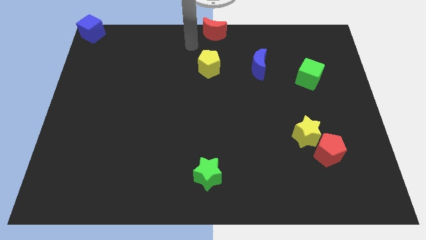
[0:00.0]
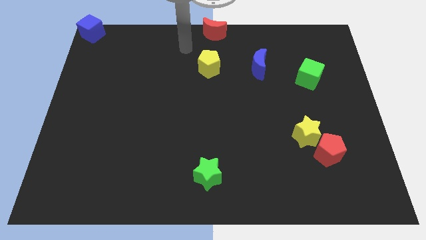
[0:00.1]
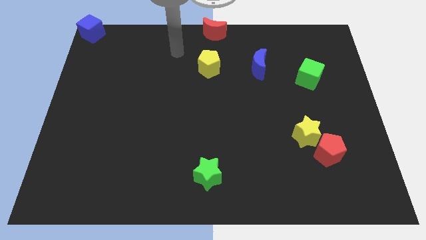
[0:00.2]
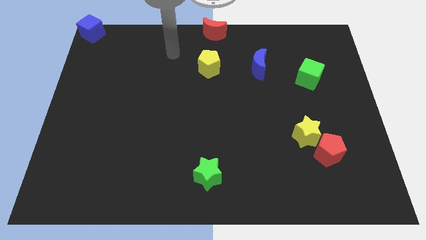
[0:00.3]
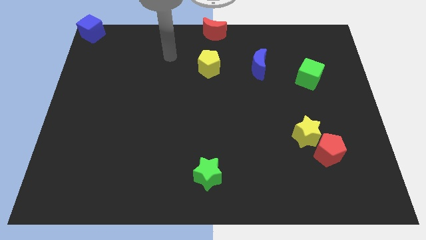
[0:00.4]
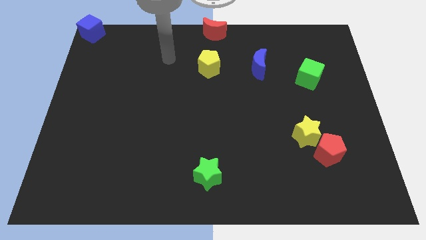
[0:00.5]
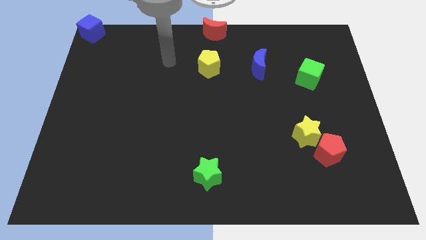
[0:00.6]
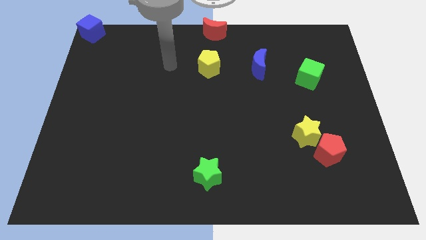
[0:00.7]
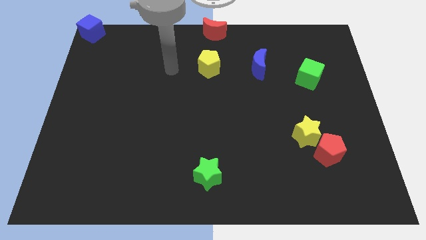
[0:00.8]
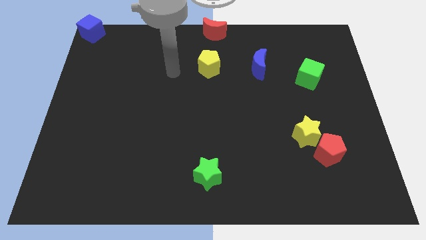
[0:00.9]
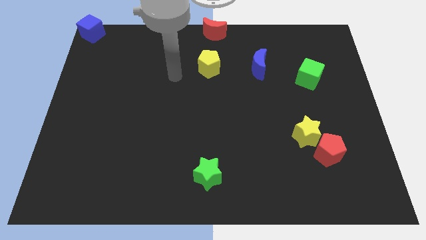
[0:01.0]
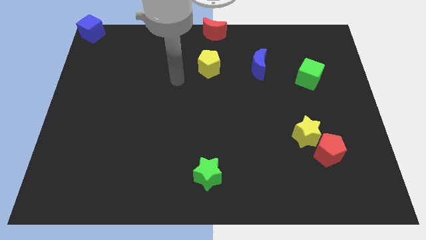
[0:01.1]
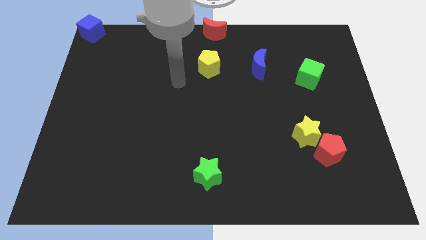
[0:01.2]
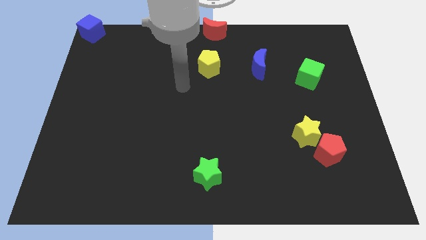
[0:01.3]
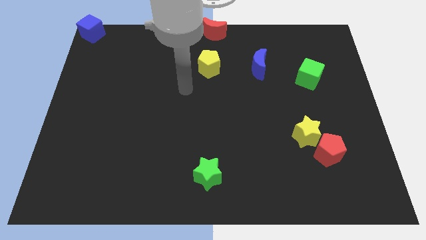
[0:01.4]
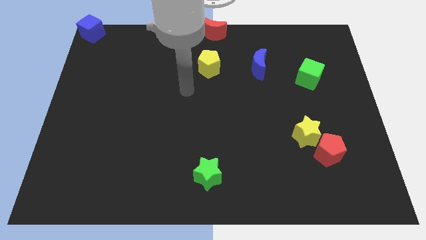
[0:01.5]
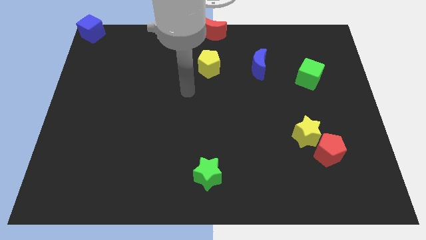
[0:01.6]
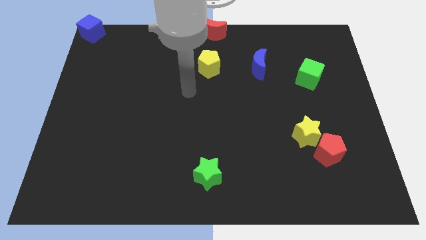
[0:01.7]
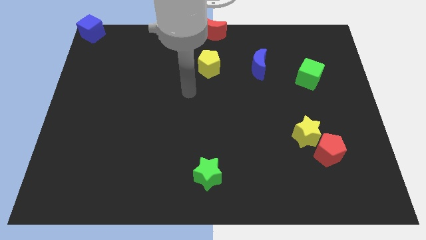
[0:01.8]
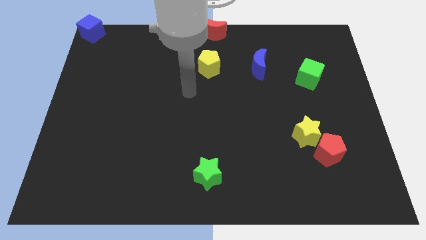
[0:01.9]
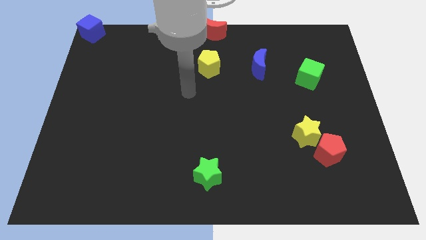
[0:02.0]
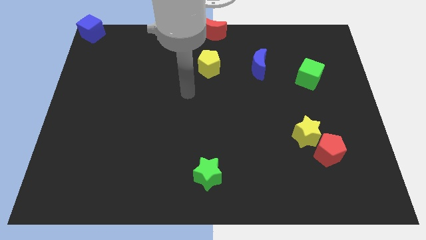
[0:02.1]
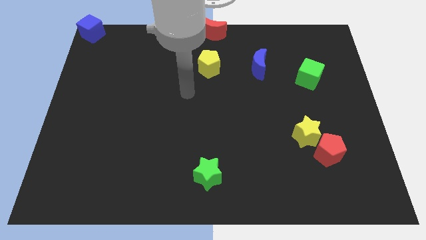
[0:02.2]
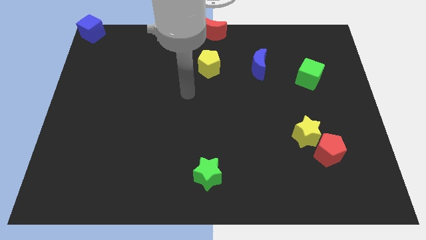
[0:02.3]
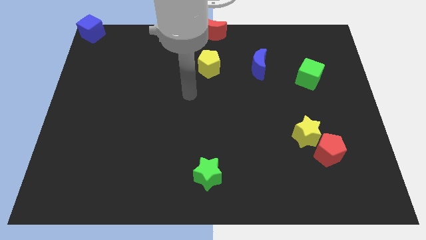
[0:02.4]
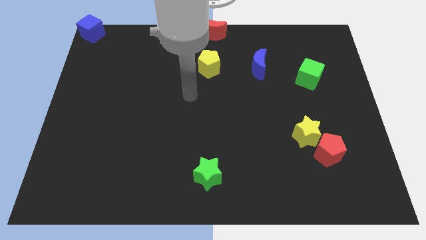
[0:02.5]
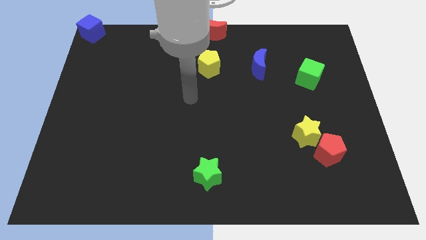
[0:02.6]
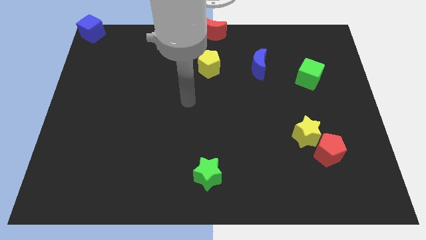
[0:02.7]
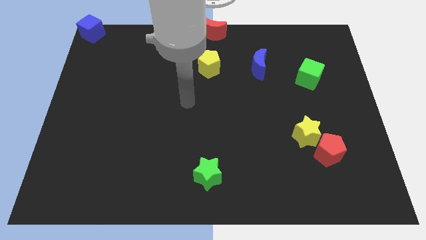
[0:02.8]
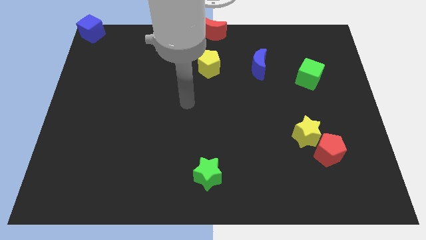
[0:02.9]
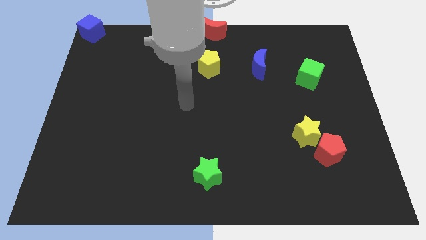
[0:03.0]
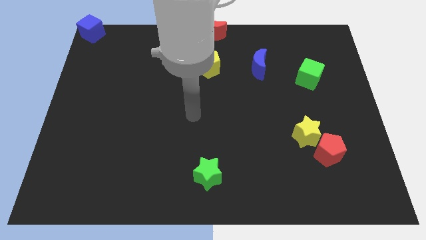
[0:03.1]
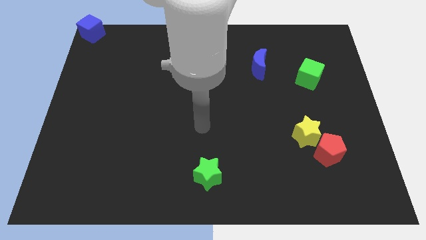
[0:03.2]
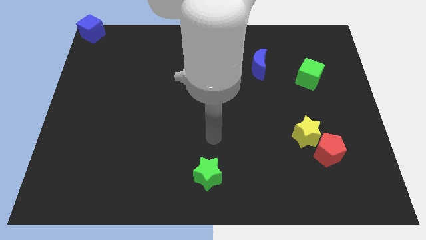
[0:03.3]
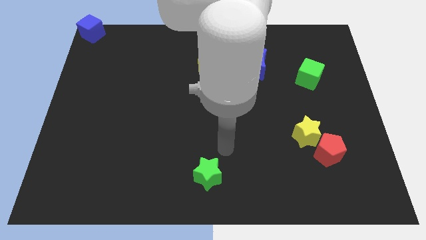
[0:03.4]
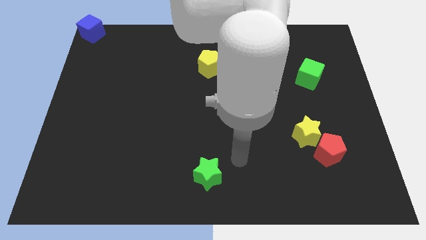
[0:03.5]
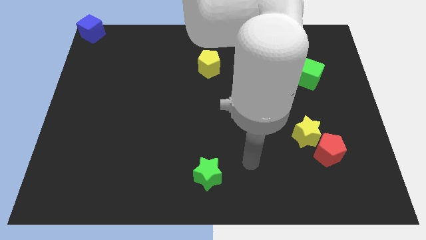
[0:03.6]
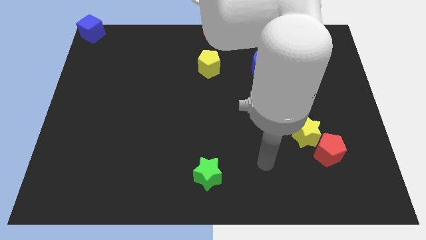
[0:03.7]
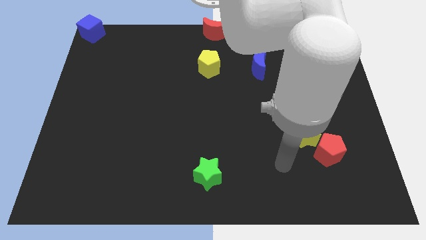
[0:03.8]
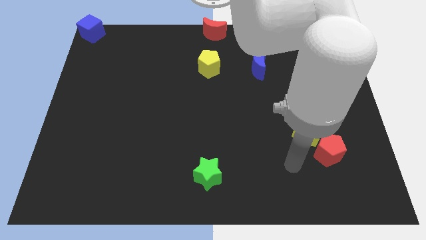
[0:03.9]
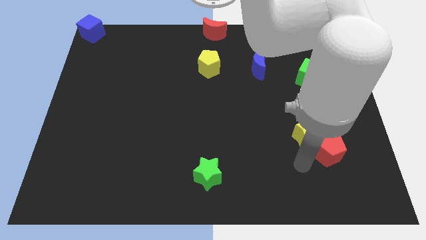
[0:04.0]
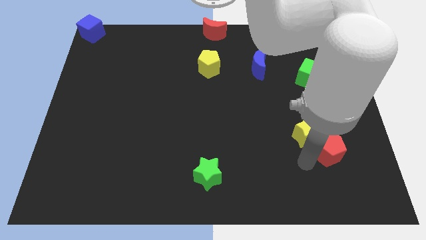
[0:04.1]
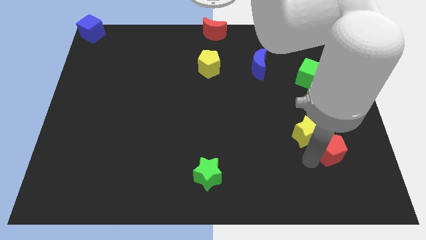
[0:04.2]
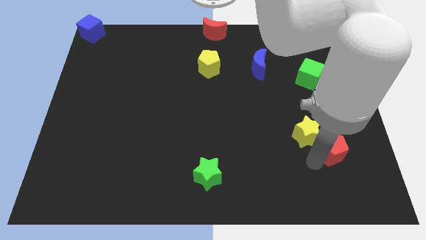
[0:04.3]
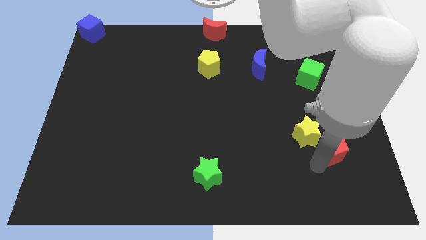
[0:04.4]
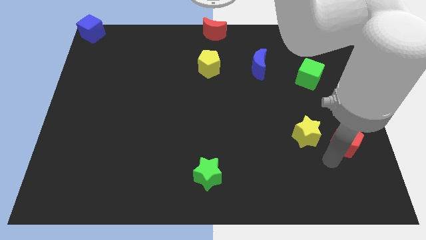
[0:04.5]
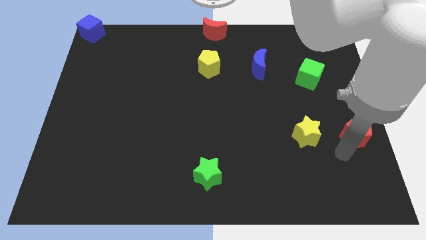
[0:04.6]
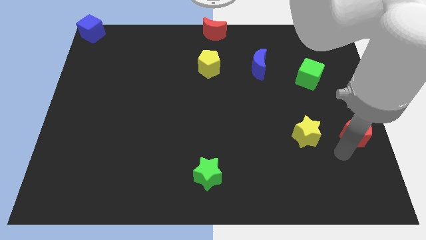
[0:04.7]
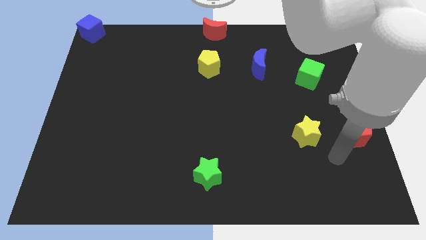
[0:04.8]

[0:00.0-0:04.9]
move the red pentagon to the right of the yellow star

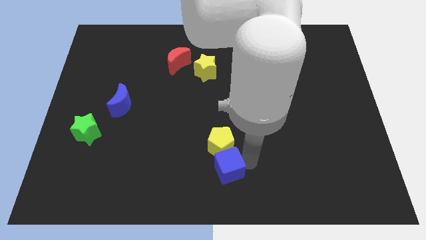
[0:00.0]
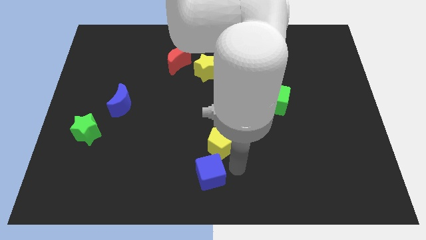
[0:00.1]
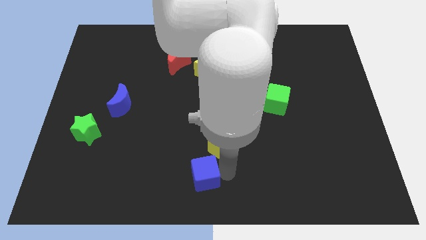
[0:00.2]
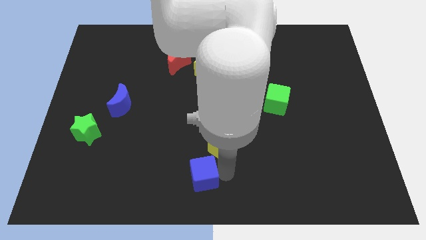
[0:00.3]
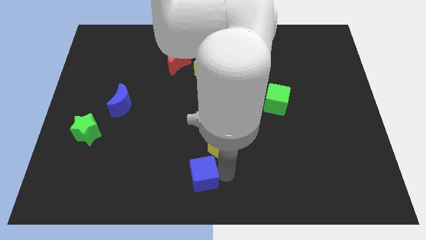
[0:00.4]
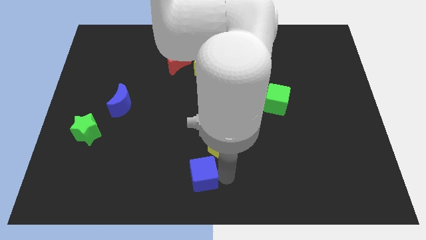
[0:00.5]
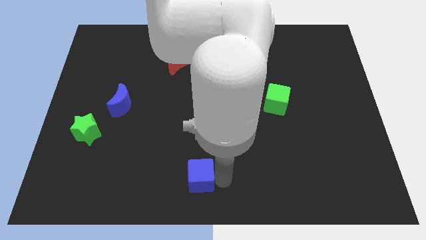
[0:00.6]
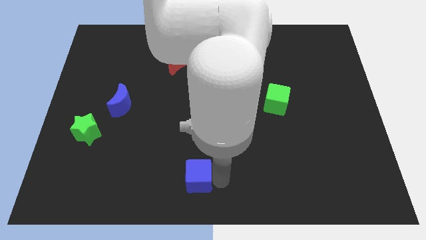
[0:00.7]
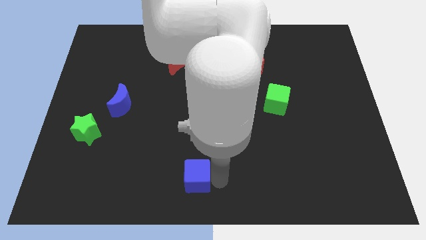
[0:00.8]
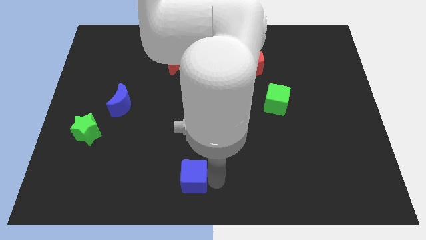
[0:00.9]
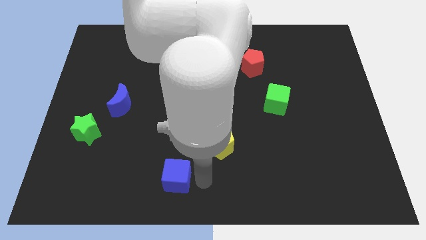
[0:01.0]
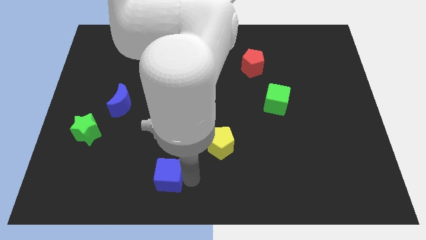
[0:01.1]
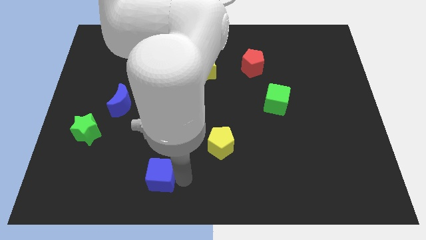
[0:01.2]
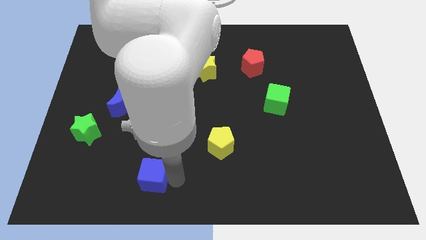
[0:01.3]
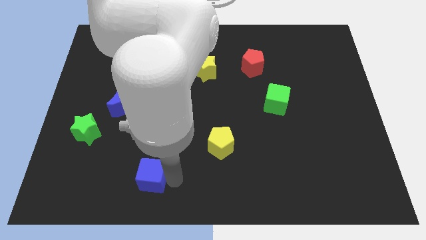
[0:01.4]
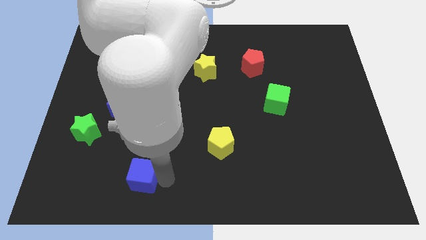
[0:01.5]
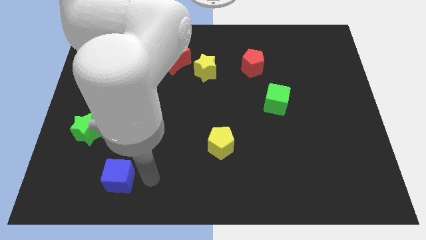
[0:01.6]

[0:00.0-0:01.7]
separate the blue cube and yellow pentagon

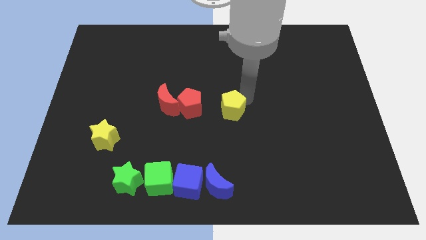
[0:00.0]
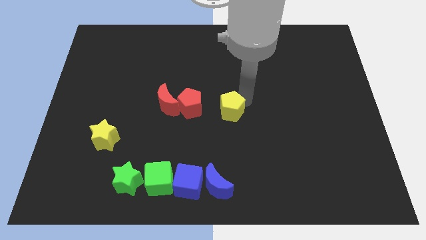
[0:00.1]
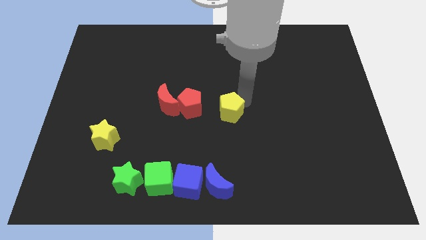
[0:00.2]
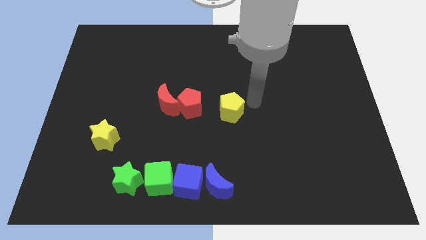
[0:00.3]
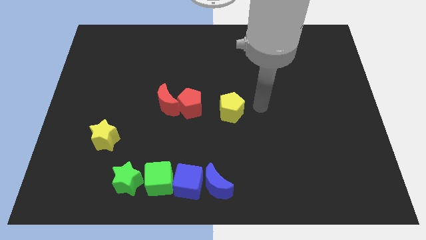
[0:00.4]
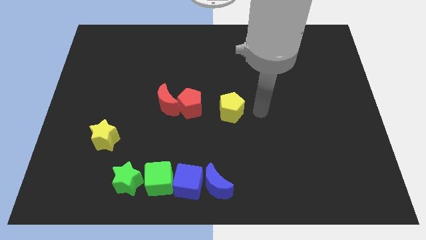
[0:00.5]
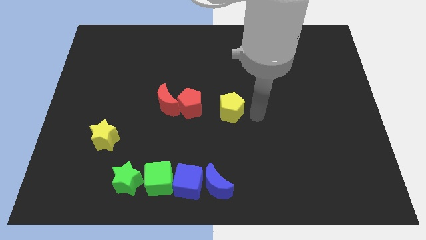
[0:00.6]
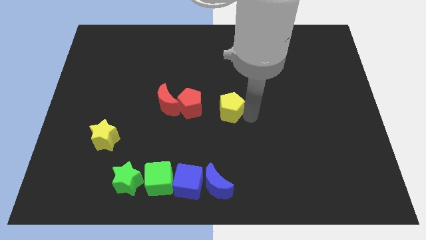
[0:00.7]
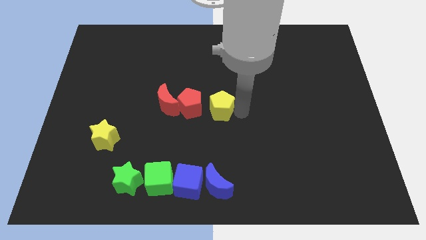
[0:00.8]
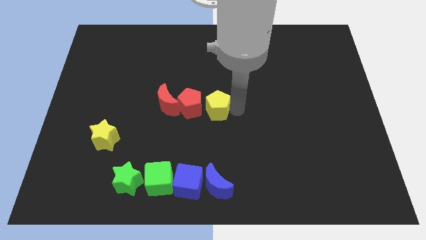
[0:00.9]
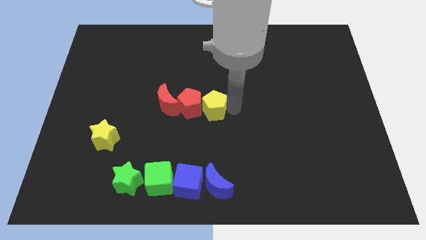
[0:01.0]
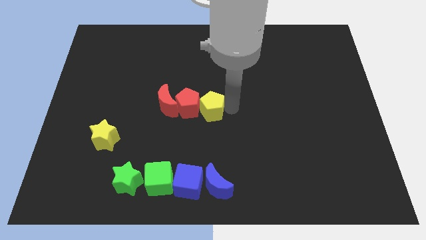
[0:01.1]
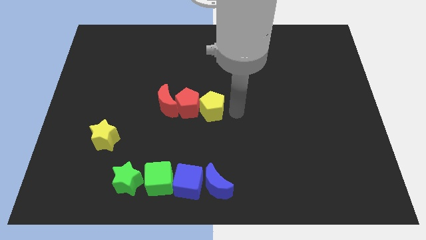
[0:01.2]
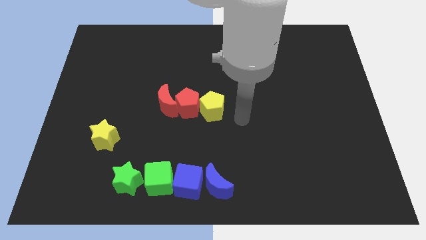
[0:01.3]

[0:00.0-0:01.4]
push the yellow pentagon into red pentagon

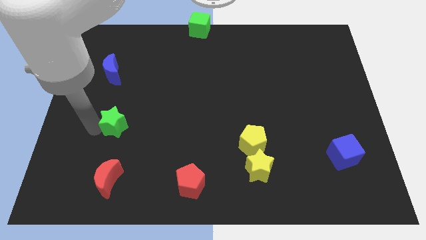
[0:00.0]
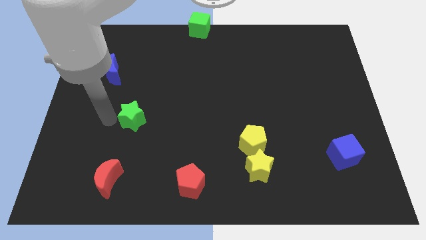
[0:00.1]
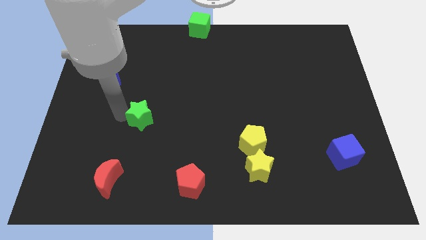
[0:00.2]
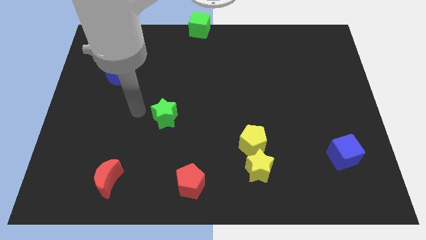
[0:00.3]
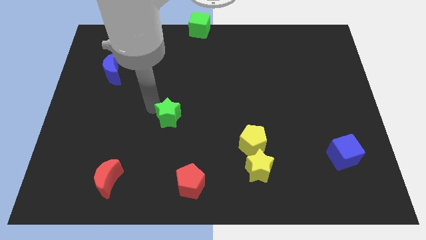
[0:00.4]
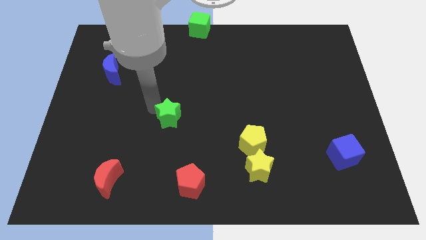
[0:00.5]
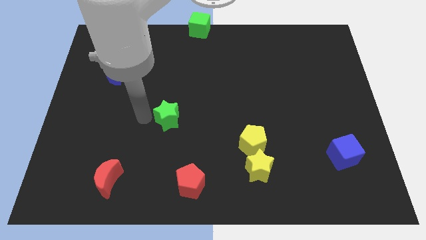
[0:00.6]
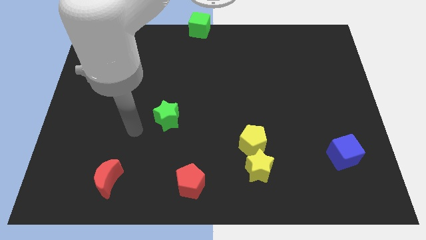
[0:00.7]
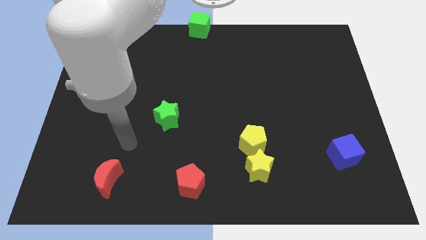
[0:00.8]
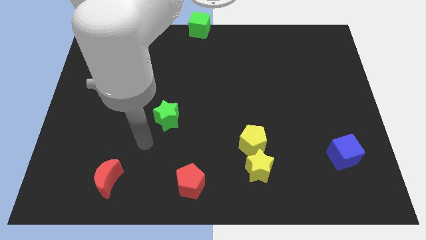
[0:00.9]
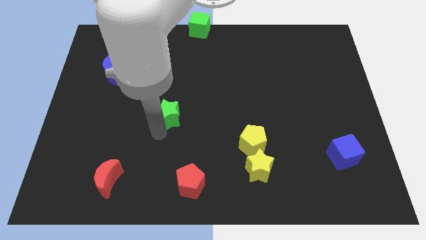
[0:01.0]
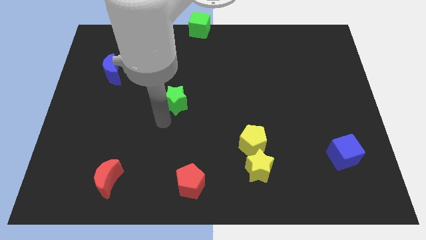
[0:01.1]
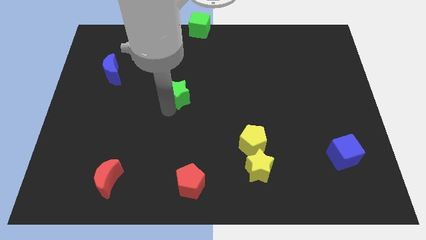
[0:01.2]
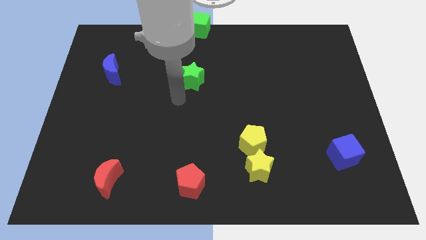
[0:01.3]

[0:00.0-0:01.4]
drag the green star underneath the green cube
